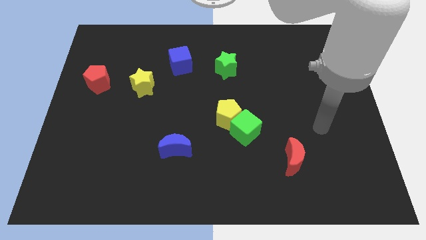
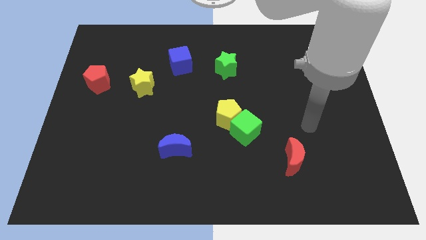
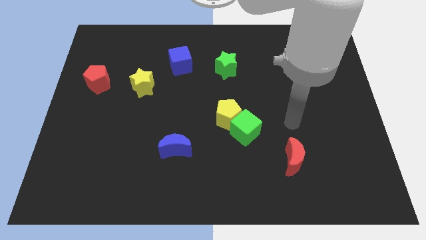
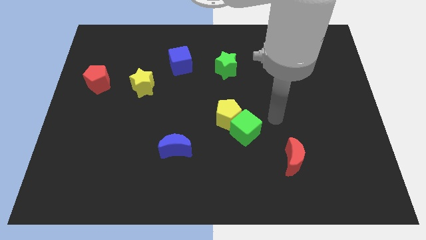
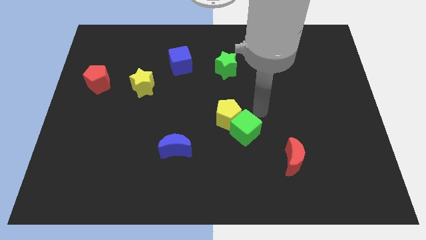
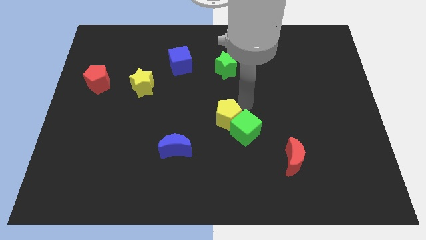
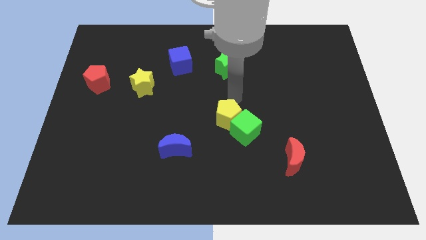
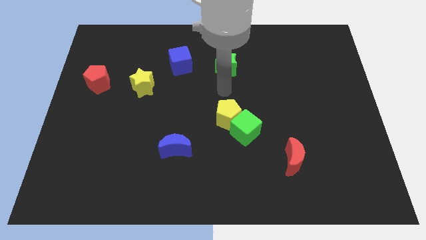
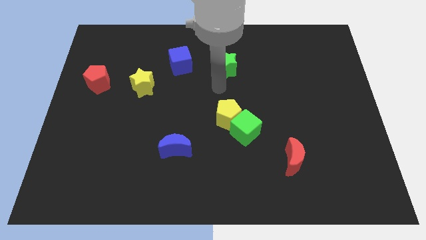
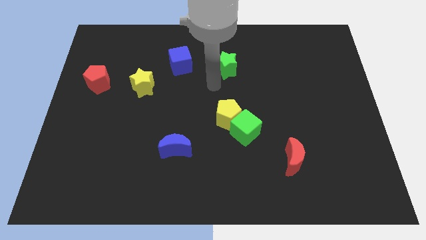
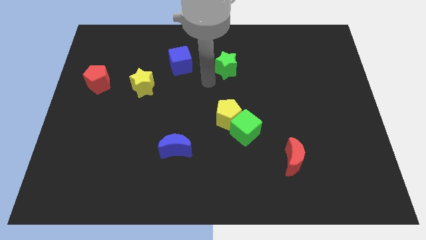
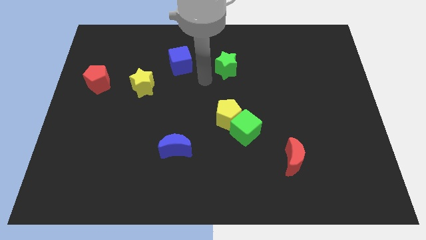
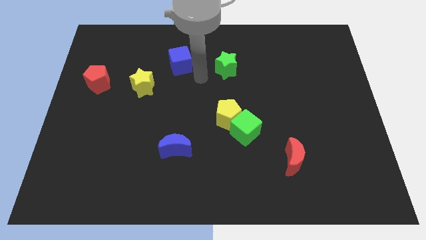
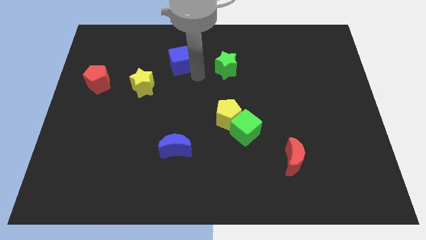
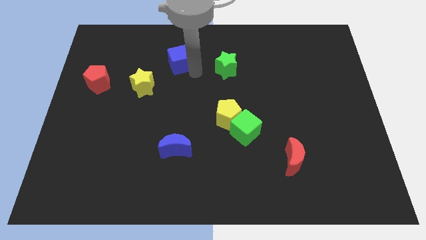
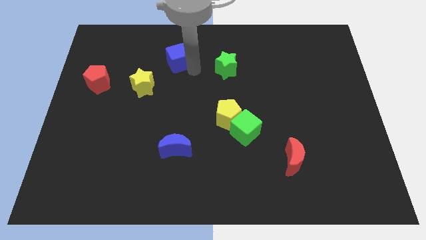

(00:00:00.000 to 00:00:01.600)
touch the bottom side of the blue cube

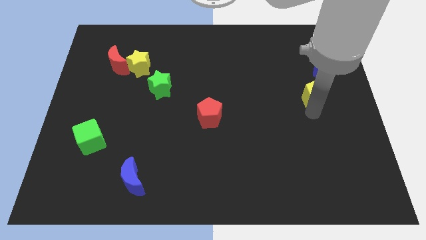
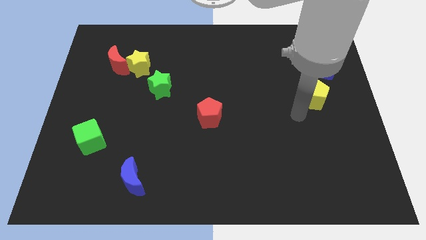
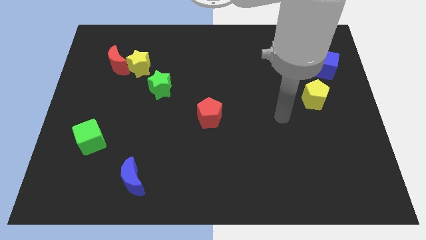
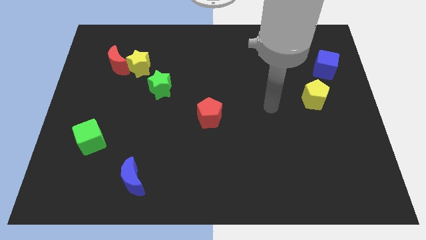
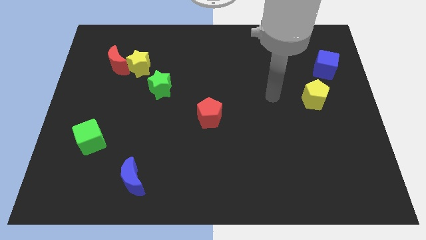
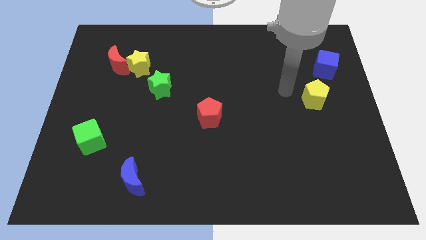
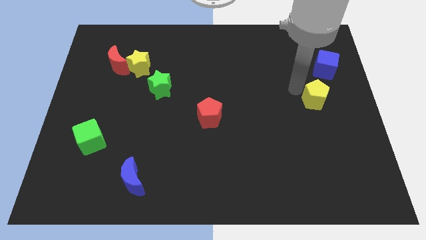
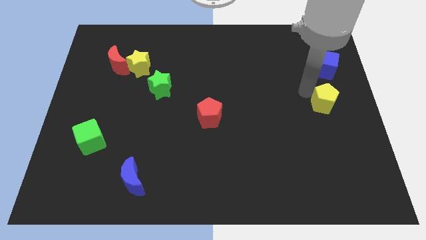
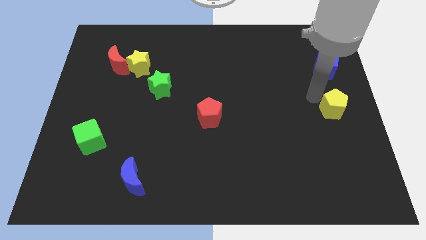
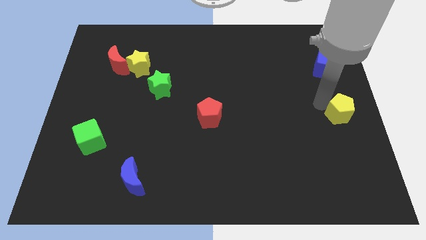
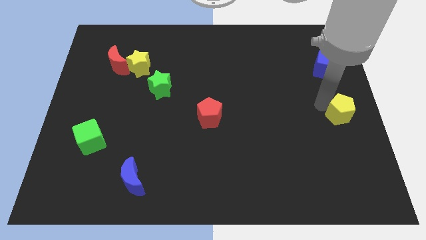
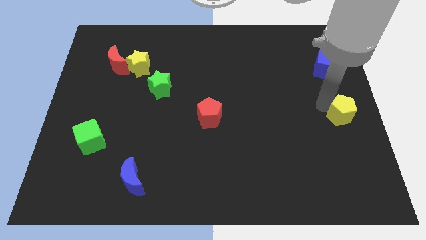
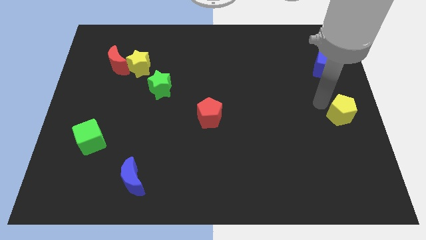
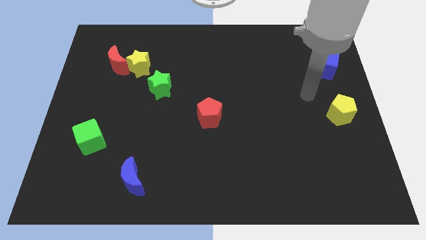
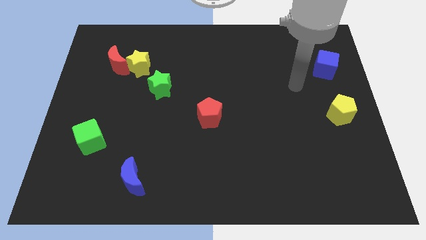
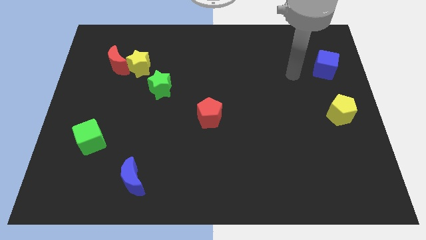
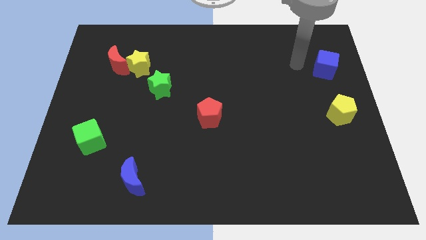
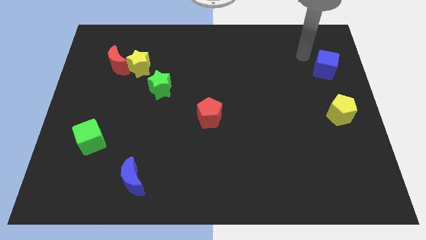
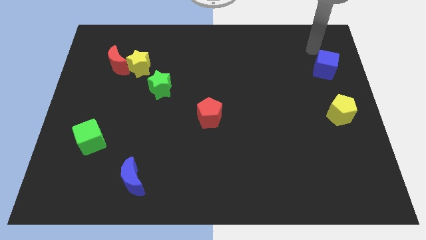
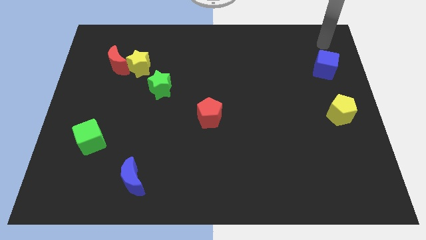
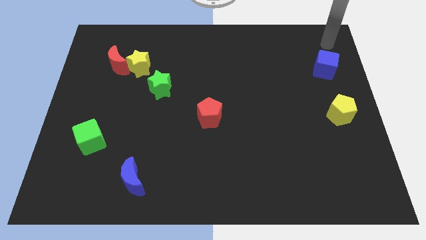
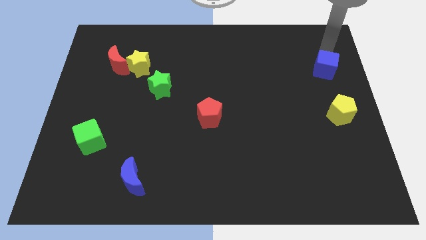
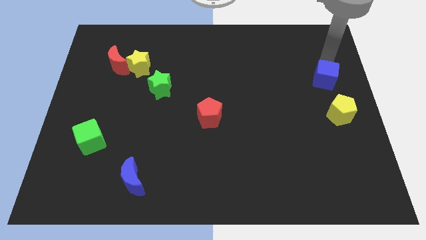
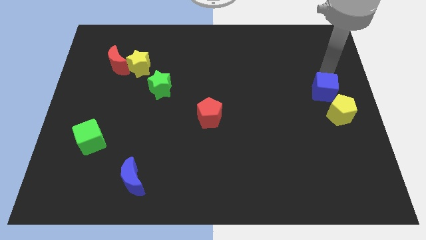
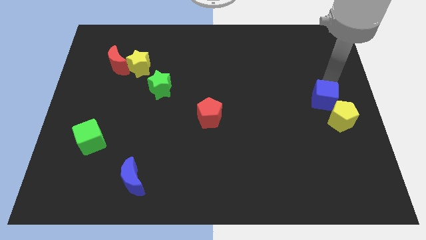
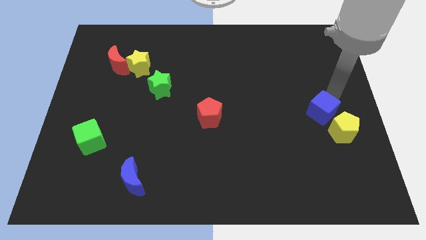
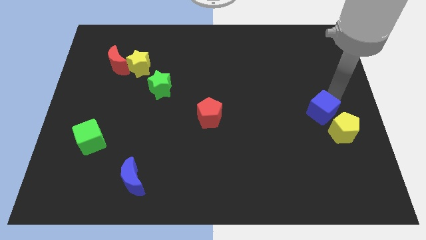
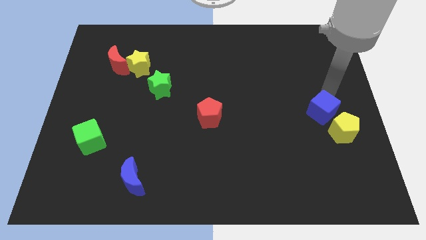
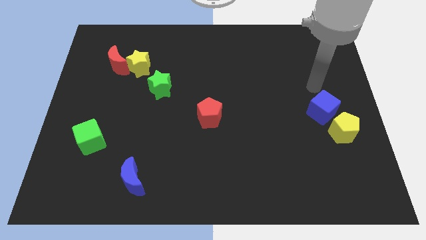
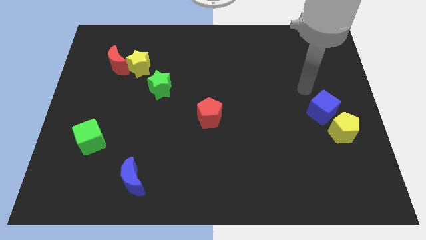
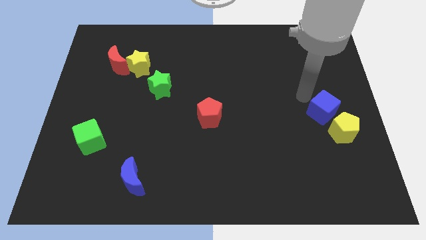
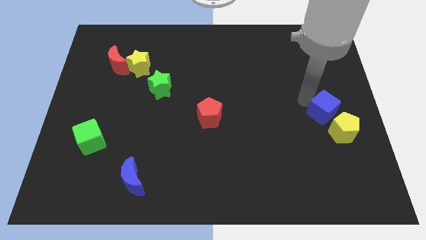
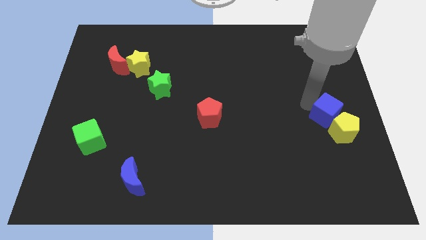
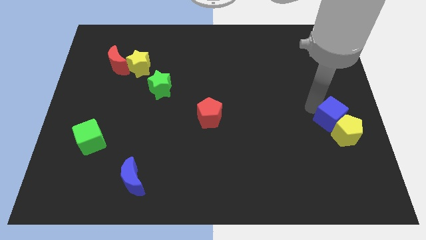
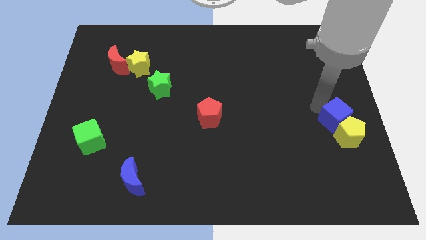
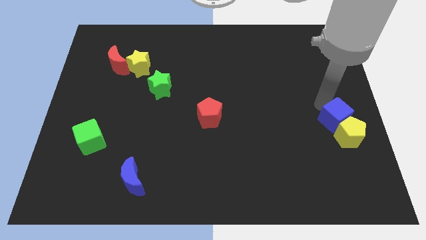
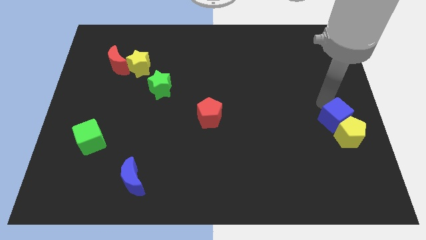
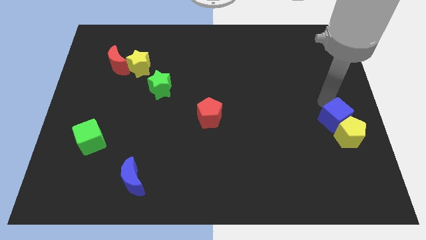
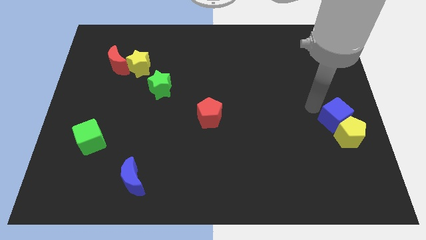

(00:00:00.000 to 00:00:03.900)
push the blue cube and yellow pentagon towards the bottom side

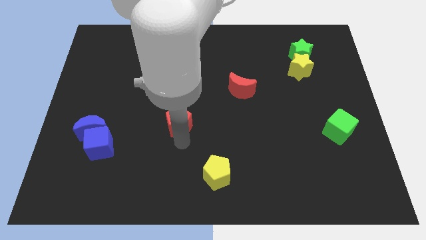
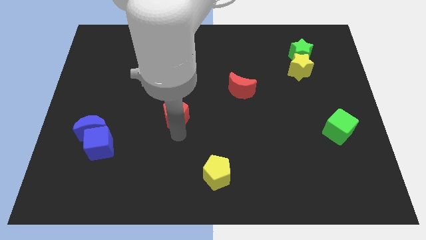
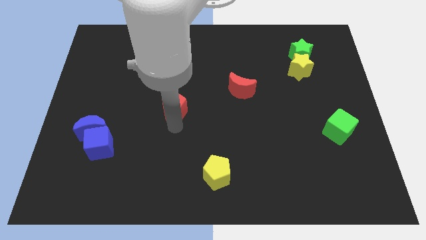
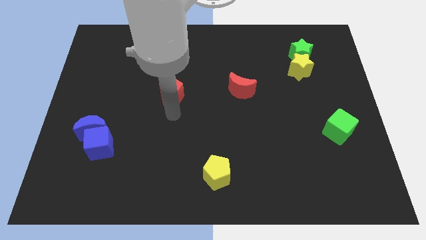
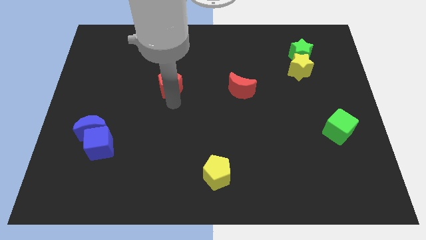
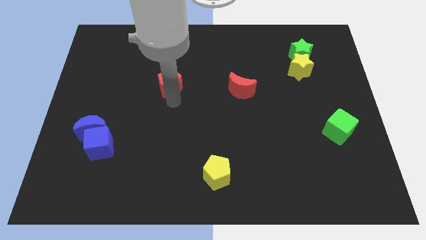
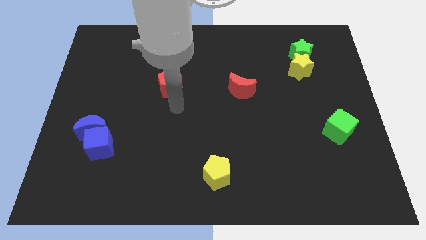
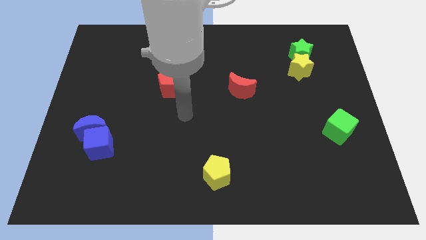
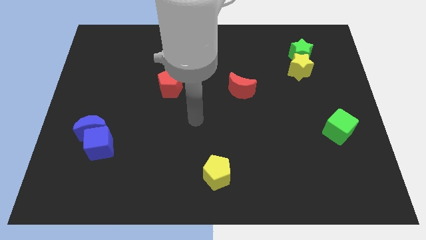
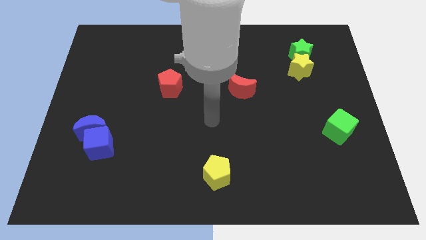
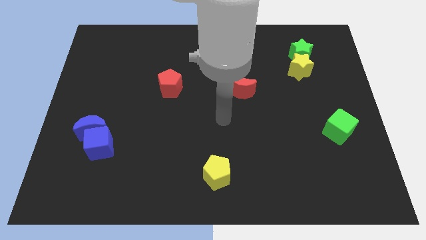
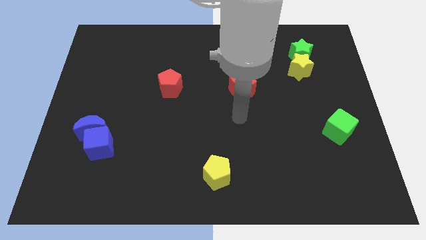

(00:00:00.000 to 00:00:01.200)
push the red pentagon parallel to the left of the red moon

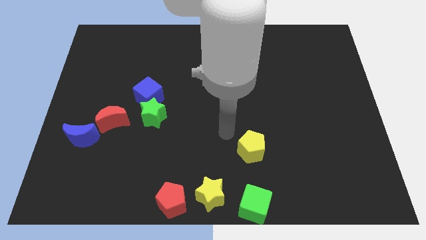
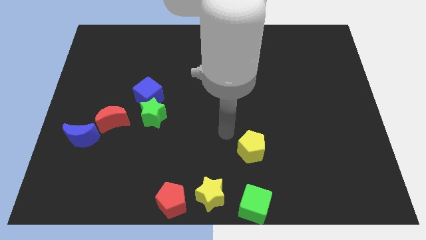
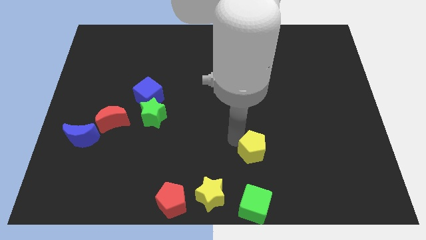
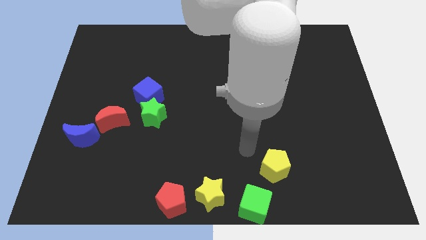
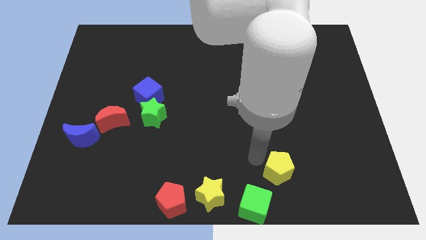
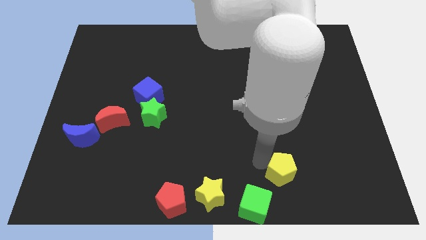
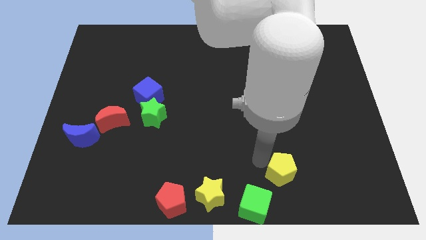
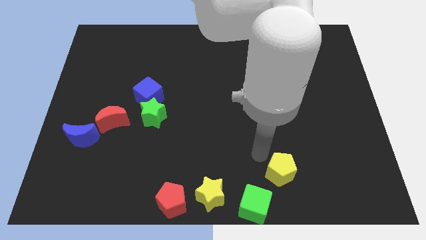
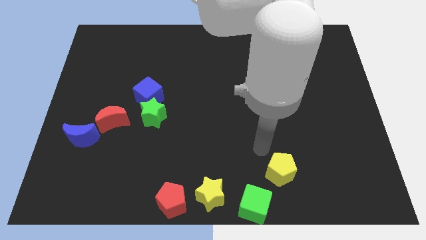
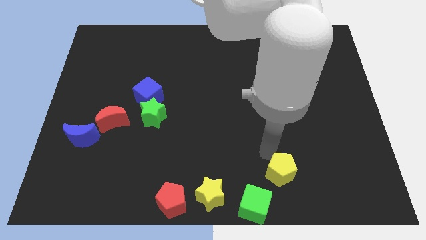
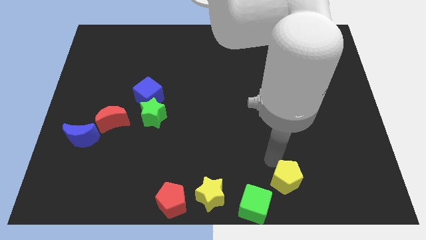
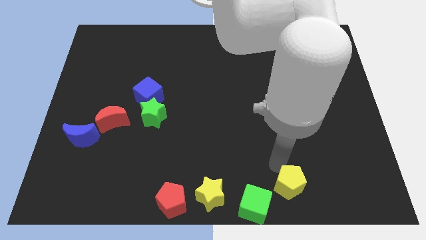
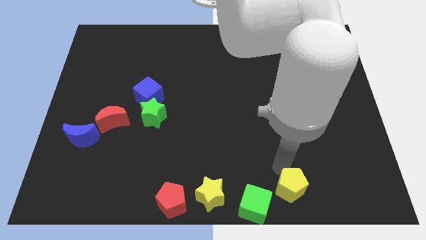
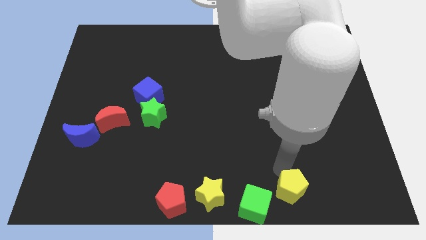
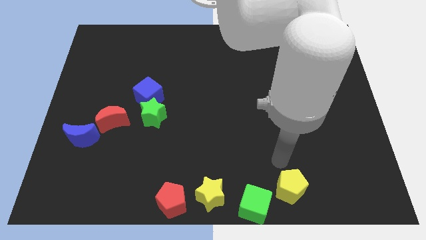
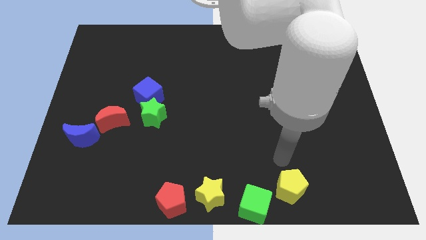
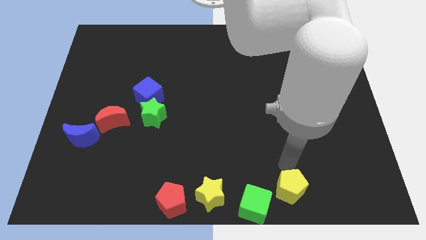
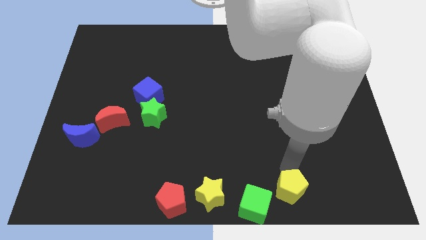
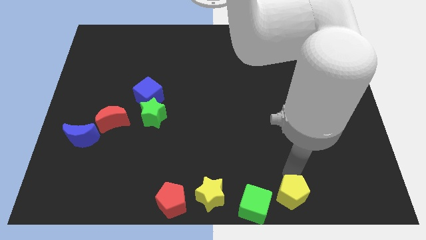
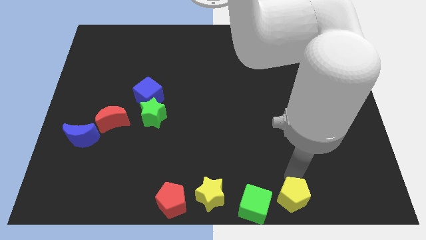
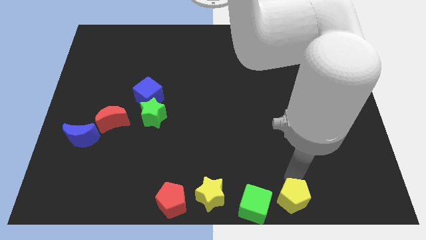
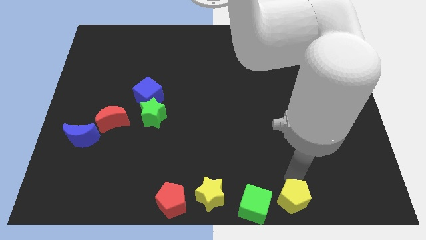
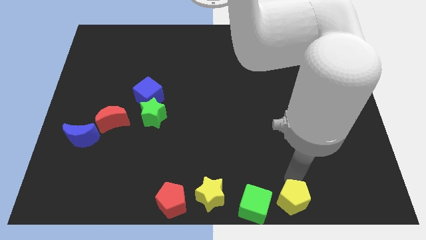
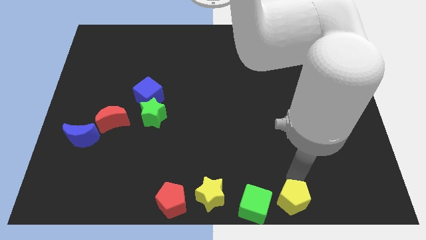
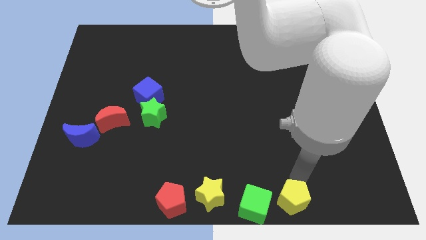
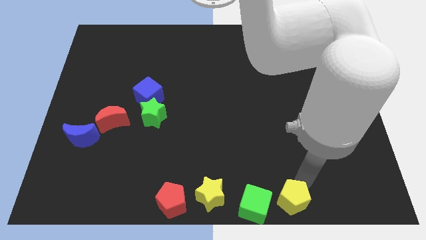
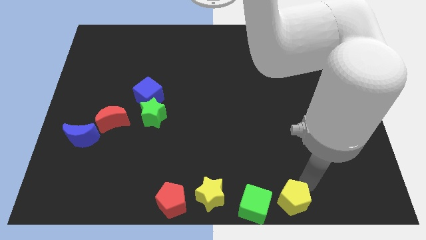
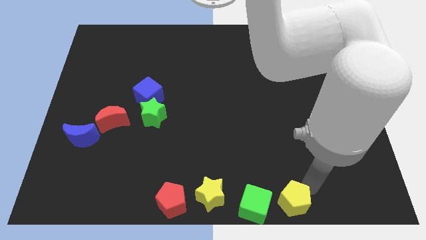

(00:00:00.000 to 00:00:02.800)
move the yellow pentagon right beside the green cube
